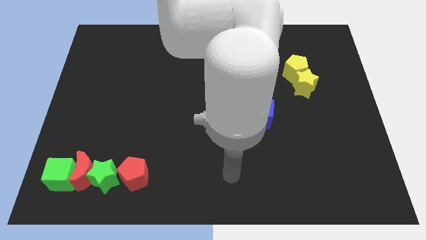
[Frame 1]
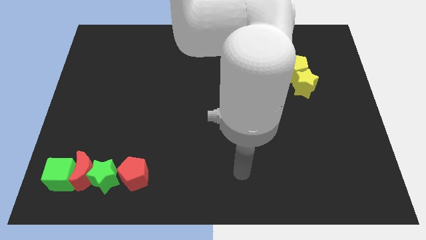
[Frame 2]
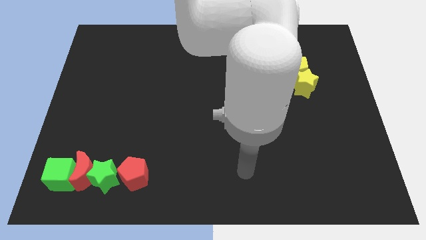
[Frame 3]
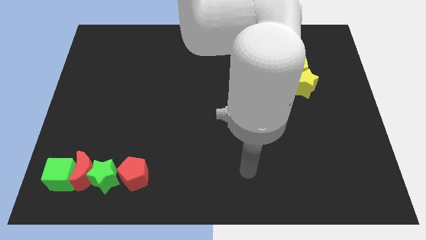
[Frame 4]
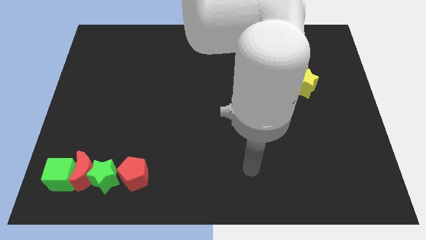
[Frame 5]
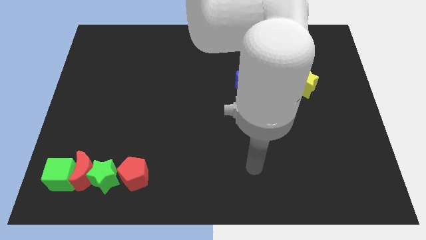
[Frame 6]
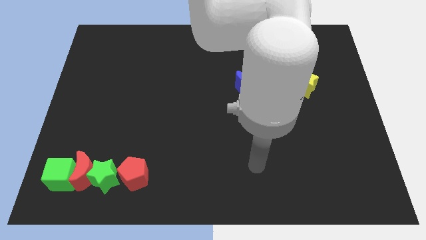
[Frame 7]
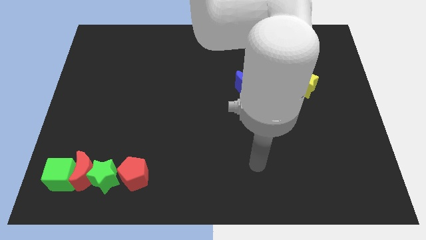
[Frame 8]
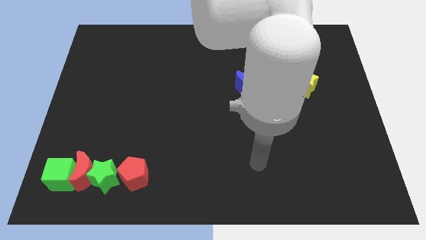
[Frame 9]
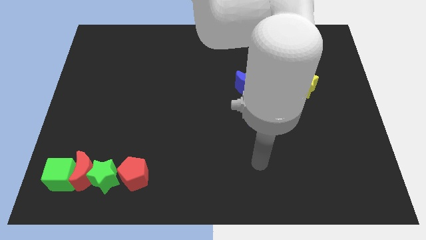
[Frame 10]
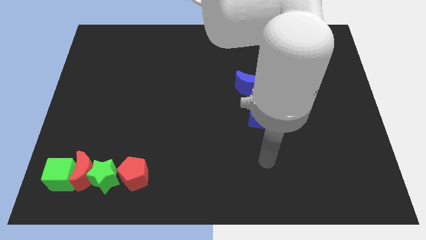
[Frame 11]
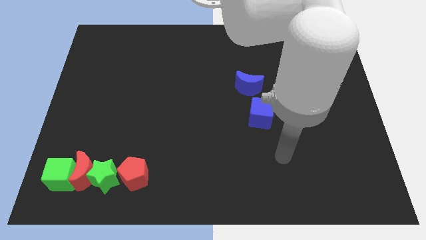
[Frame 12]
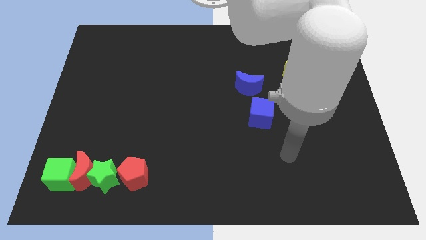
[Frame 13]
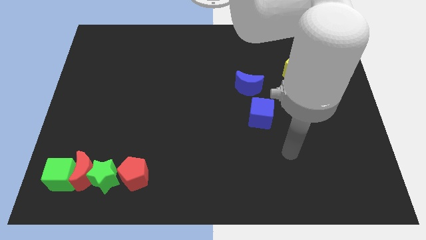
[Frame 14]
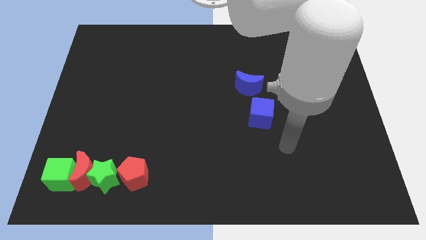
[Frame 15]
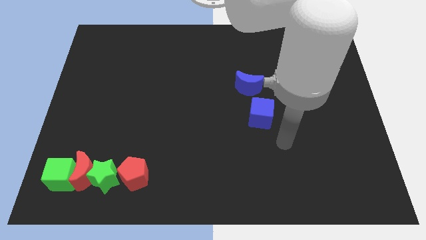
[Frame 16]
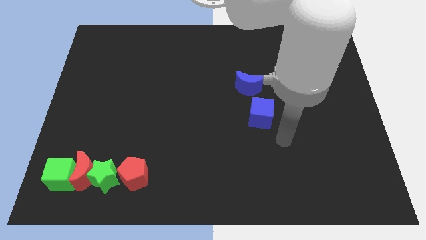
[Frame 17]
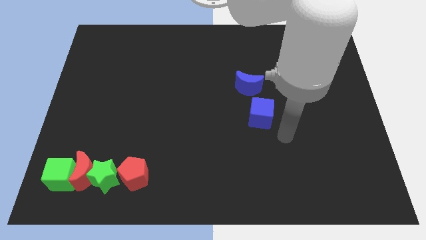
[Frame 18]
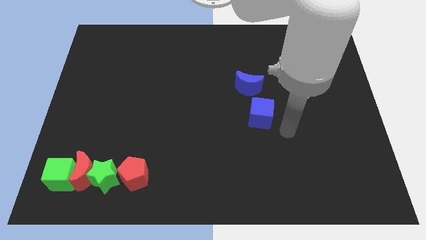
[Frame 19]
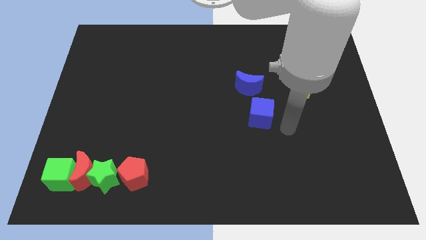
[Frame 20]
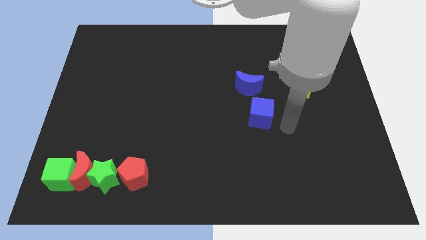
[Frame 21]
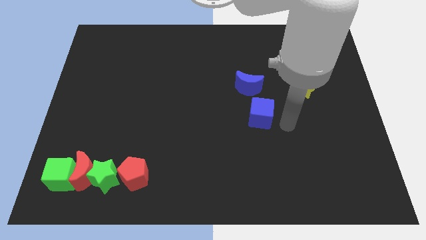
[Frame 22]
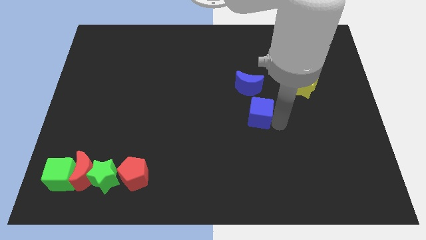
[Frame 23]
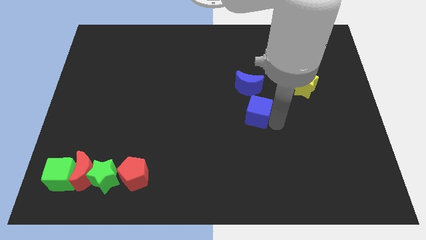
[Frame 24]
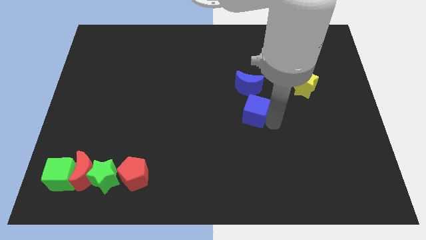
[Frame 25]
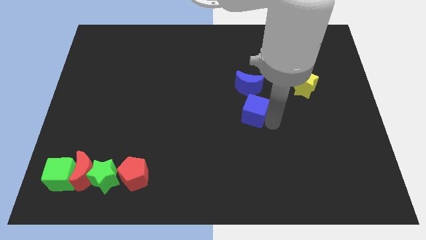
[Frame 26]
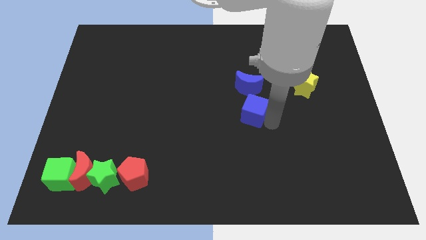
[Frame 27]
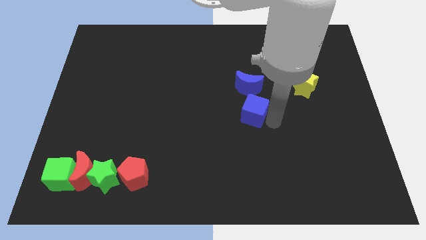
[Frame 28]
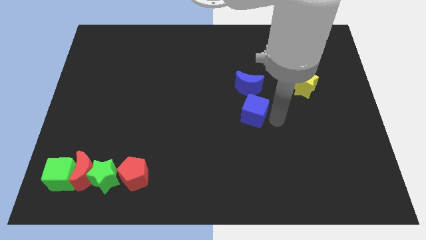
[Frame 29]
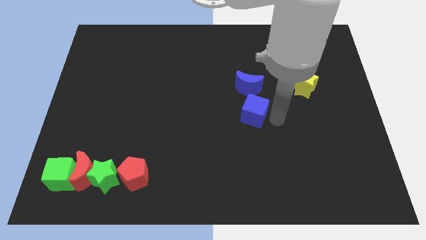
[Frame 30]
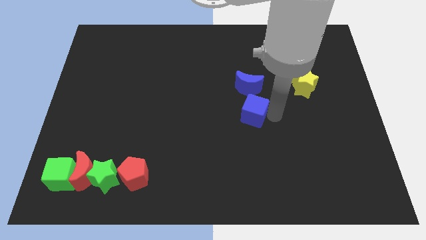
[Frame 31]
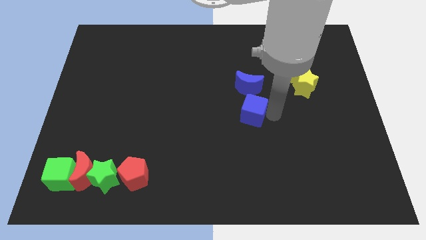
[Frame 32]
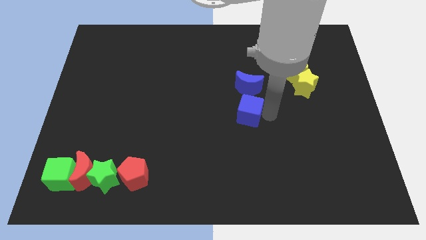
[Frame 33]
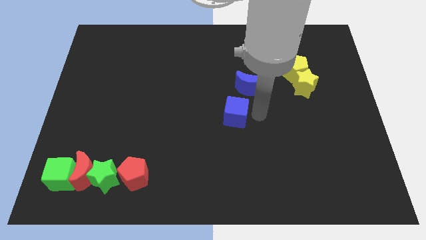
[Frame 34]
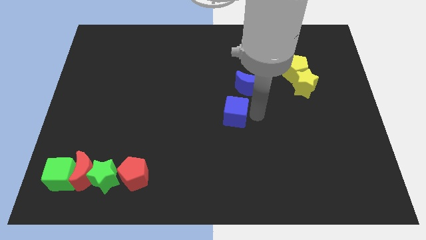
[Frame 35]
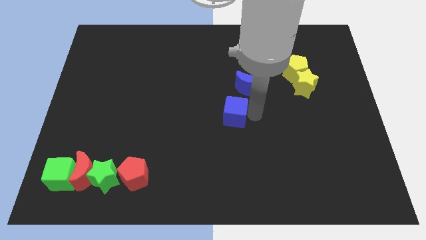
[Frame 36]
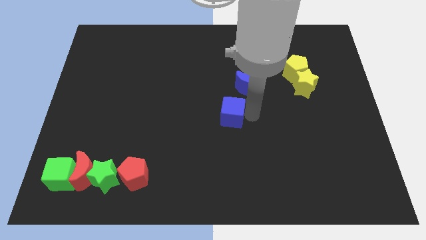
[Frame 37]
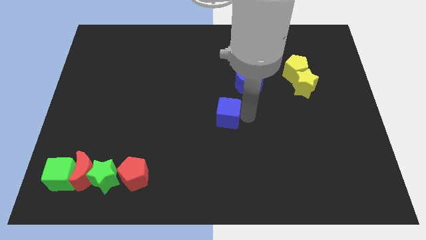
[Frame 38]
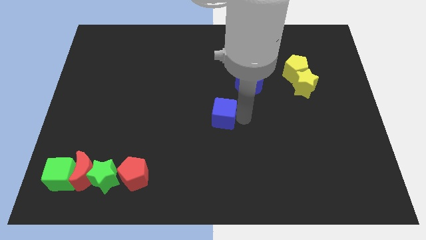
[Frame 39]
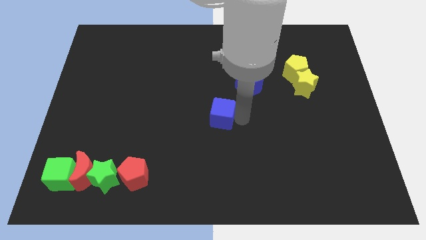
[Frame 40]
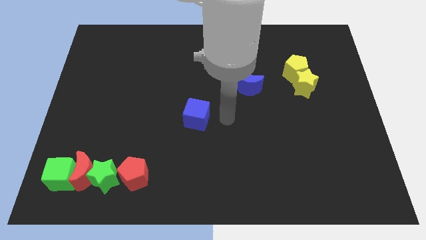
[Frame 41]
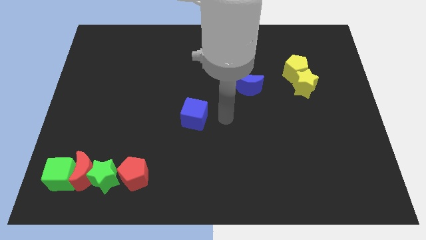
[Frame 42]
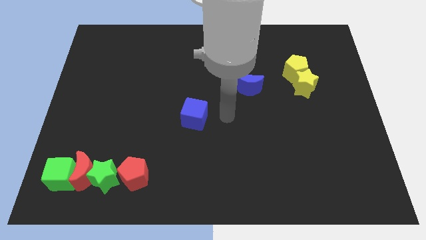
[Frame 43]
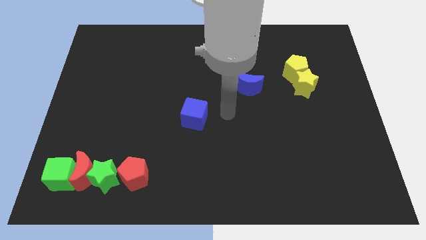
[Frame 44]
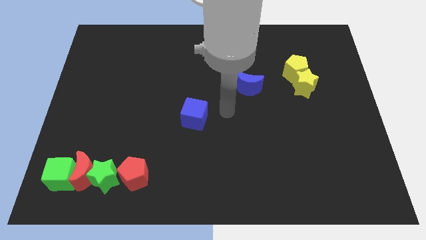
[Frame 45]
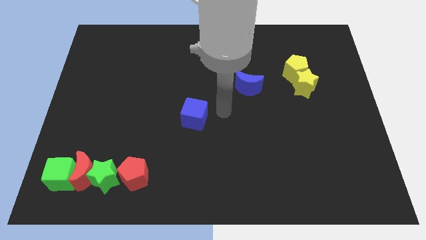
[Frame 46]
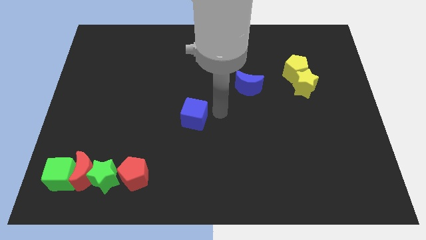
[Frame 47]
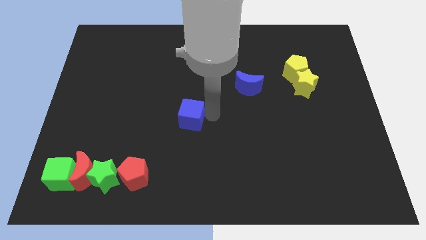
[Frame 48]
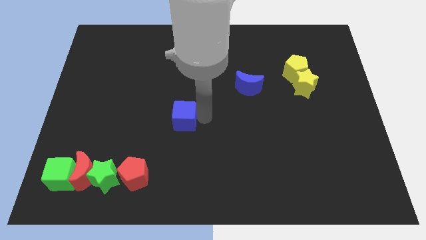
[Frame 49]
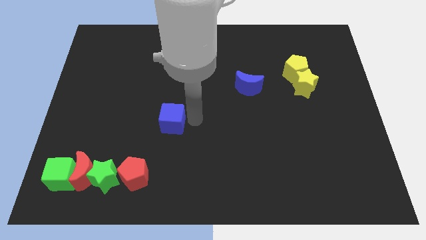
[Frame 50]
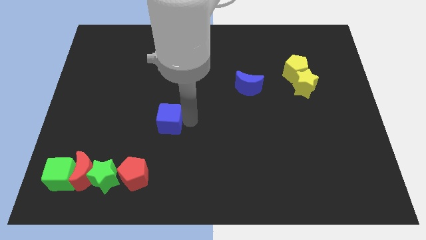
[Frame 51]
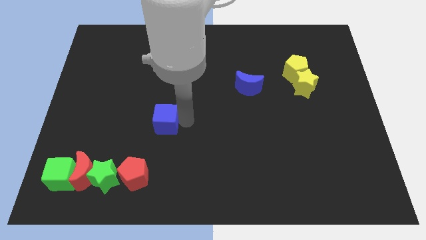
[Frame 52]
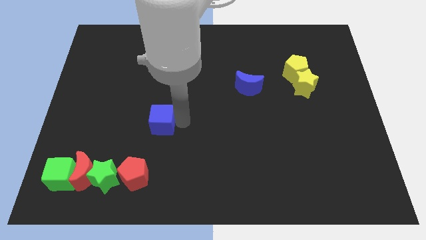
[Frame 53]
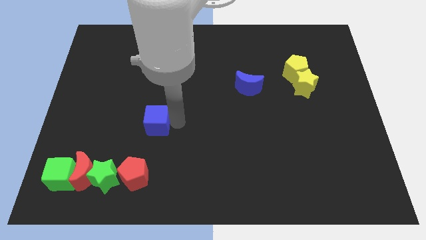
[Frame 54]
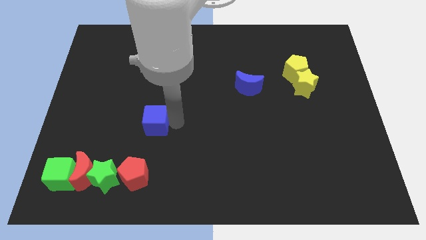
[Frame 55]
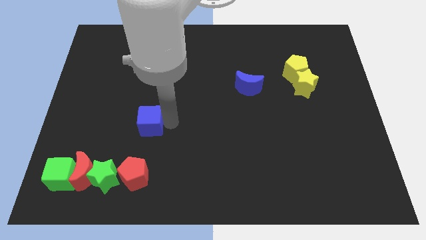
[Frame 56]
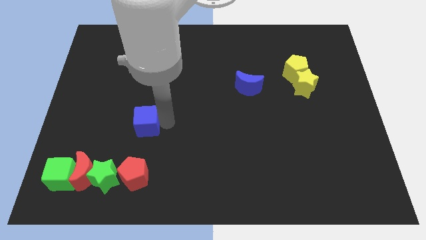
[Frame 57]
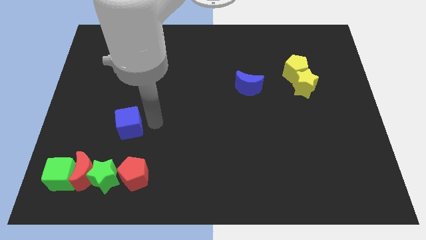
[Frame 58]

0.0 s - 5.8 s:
move blue cube vertically to the top of red pentagon

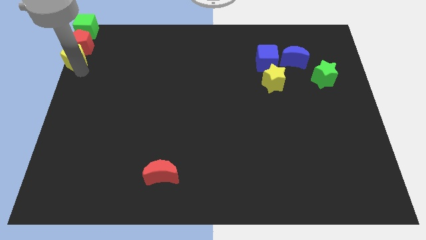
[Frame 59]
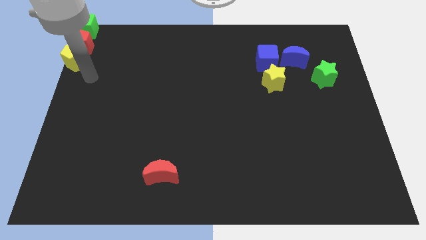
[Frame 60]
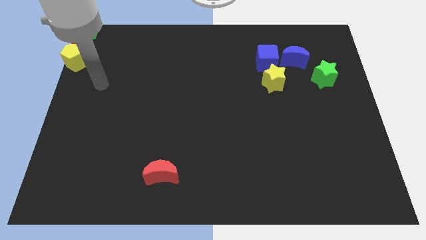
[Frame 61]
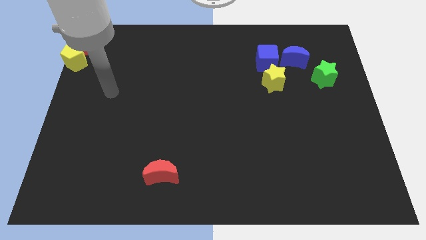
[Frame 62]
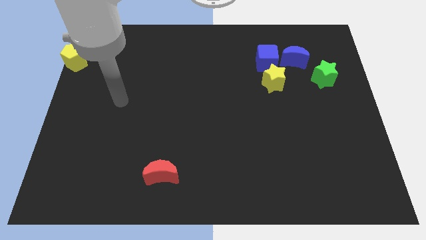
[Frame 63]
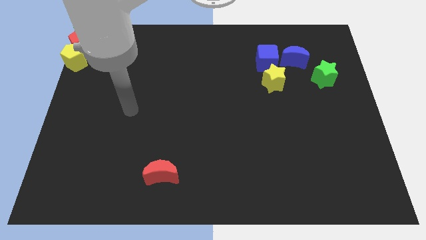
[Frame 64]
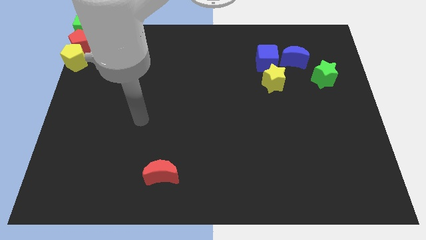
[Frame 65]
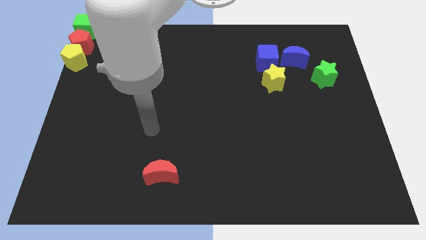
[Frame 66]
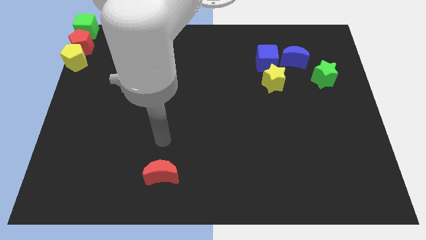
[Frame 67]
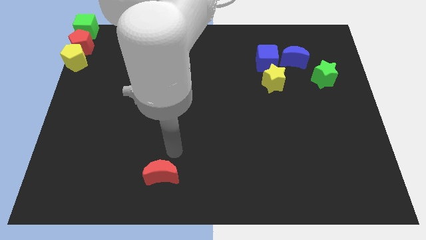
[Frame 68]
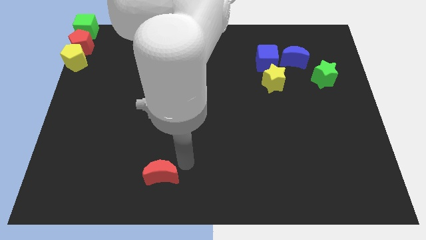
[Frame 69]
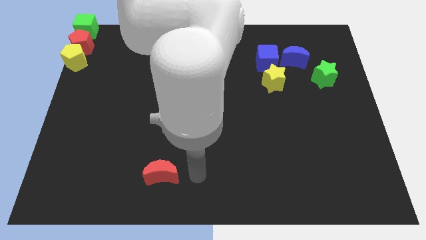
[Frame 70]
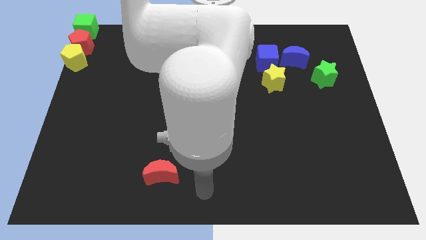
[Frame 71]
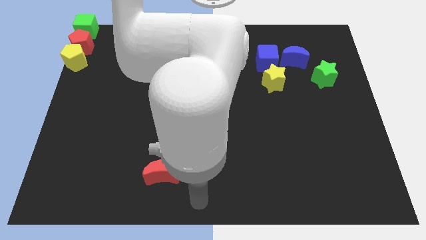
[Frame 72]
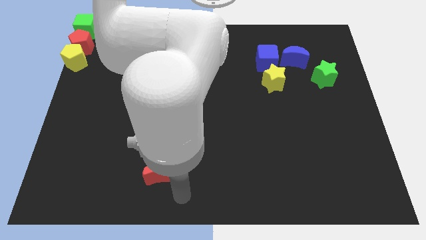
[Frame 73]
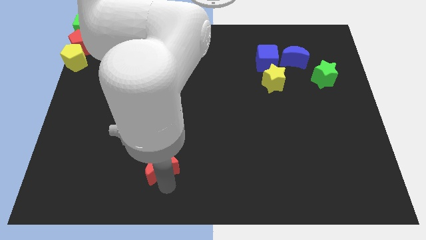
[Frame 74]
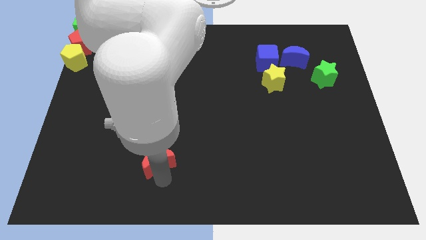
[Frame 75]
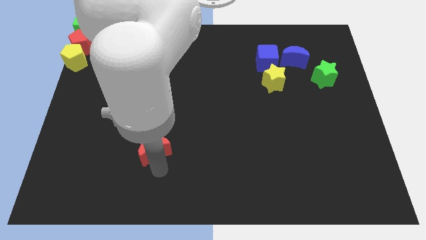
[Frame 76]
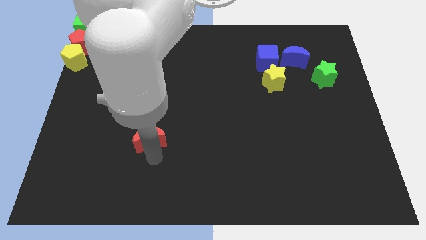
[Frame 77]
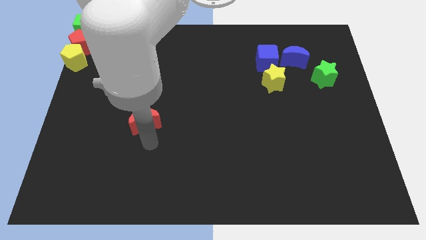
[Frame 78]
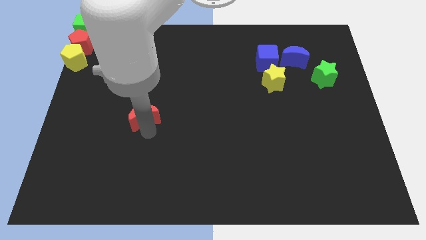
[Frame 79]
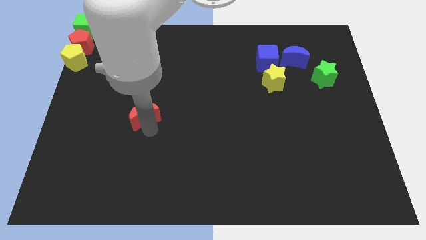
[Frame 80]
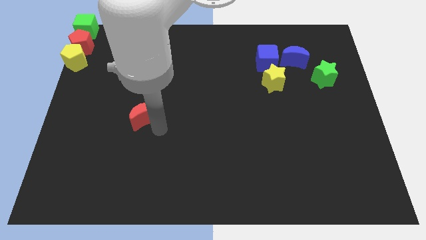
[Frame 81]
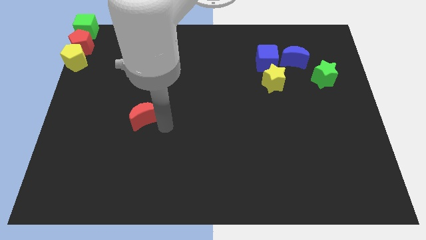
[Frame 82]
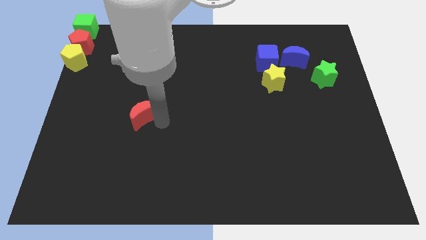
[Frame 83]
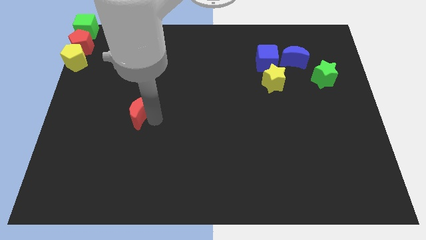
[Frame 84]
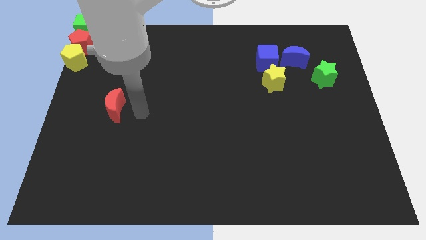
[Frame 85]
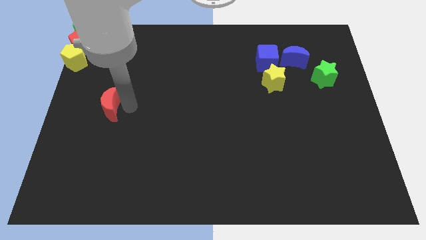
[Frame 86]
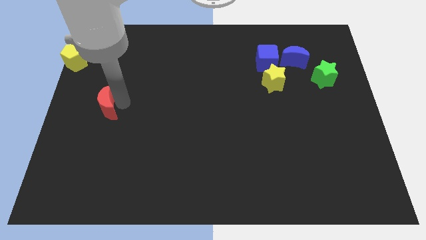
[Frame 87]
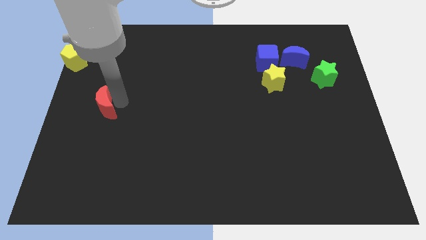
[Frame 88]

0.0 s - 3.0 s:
move the red crescent to the bottom right of the yellow pentagon
